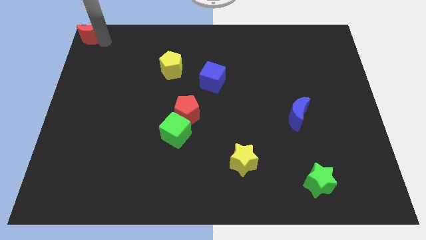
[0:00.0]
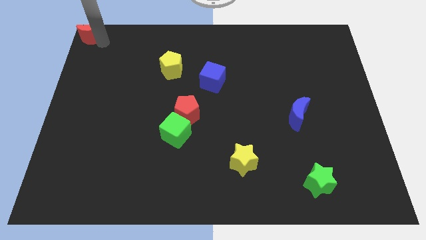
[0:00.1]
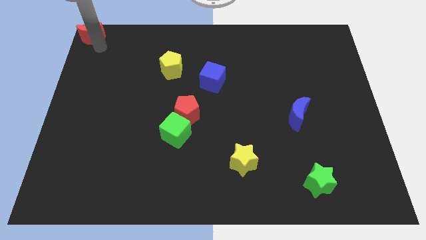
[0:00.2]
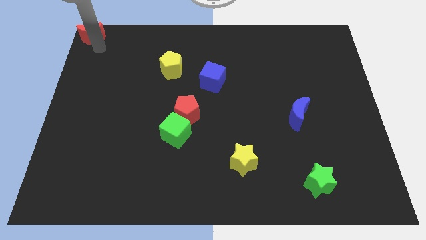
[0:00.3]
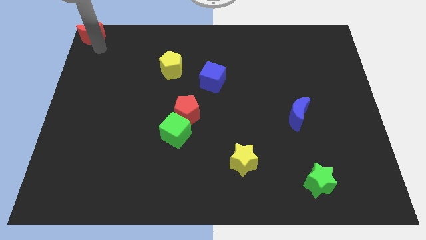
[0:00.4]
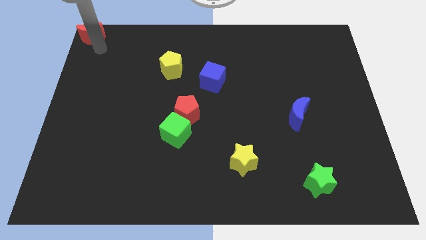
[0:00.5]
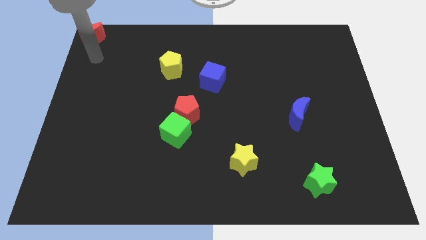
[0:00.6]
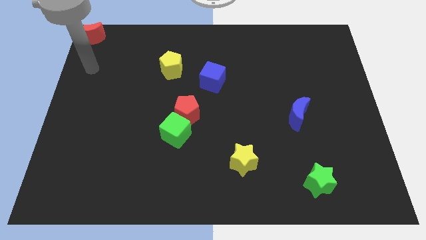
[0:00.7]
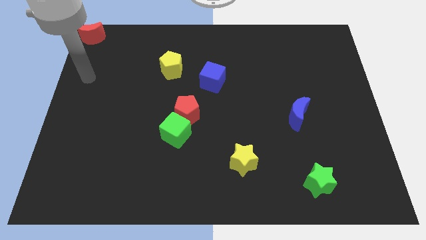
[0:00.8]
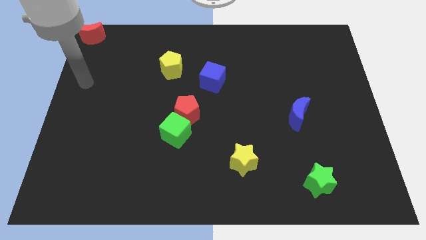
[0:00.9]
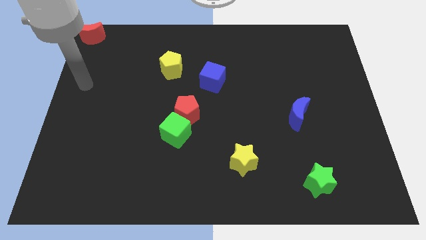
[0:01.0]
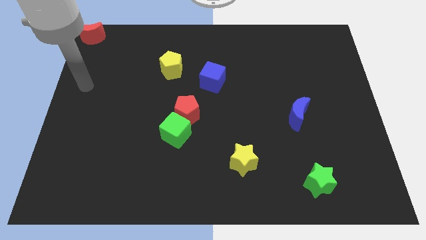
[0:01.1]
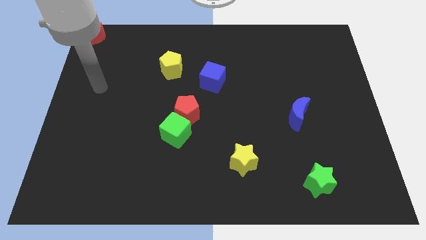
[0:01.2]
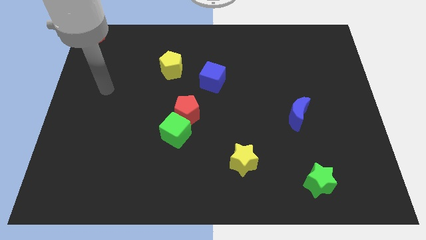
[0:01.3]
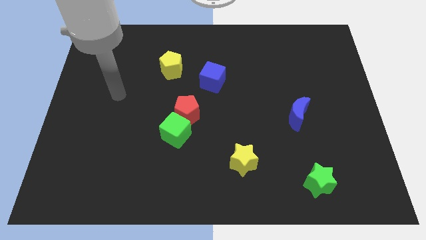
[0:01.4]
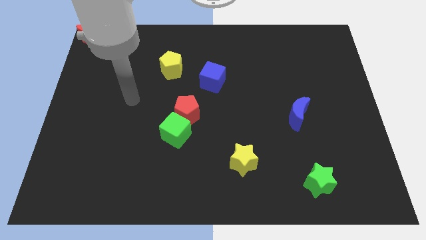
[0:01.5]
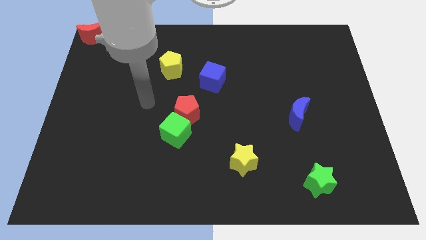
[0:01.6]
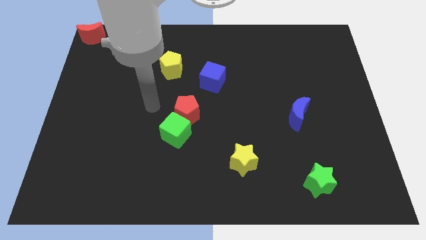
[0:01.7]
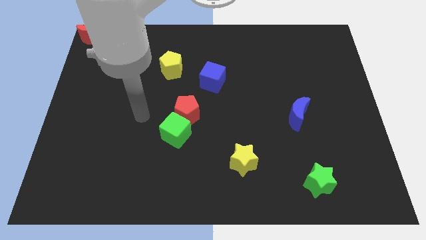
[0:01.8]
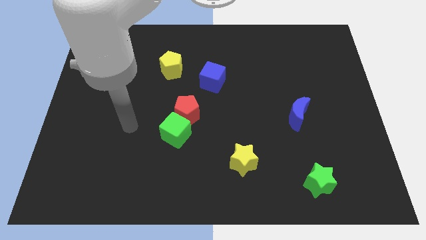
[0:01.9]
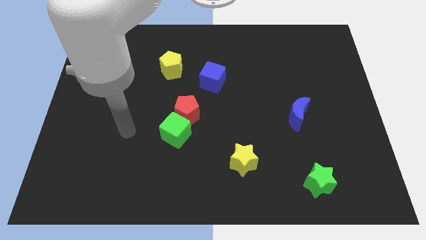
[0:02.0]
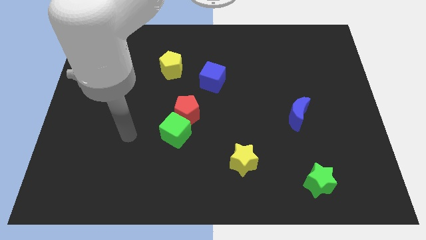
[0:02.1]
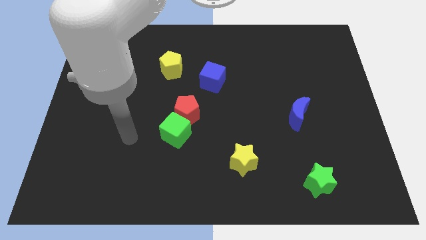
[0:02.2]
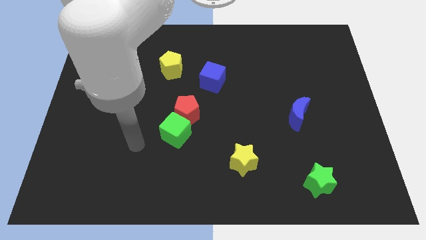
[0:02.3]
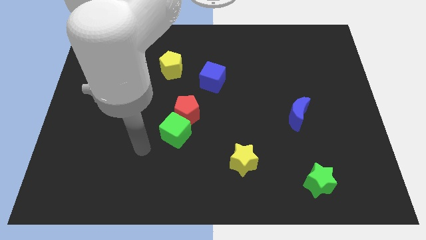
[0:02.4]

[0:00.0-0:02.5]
move the arm away from the red moon

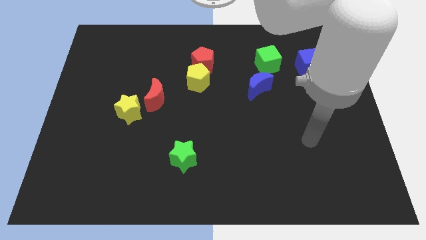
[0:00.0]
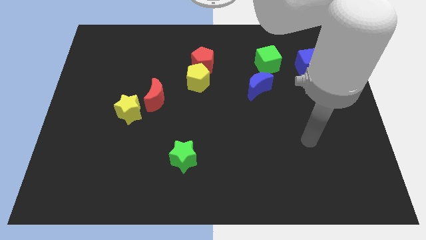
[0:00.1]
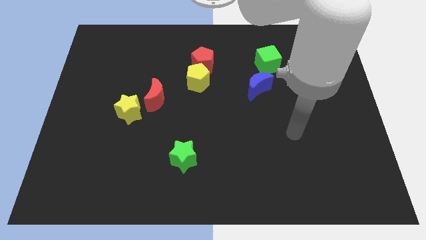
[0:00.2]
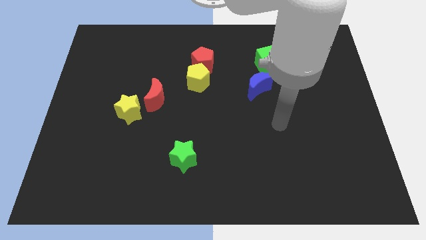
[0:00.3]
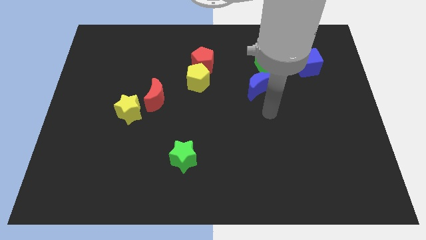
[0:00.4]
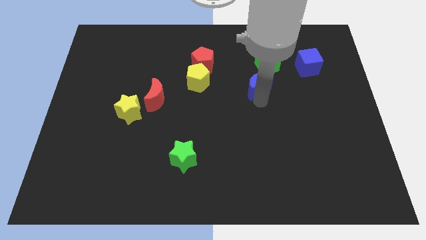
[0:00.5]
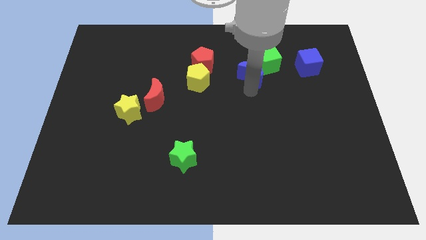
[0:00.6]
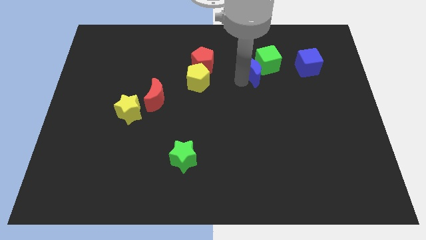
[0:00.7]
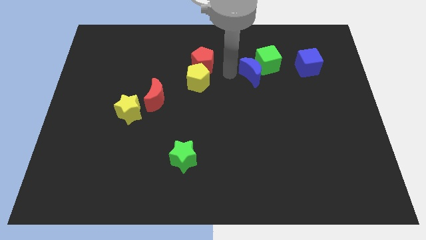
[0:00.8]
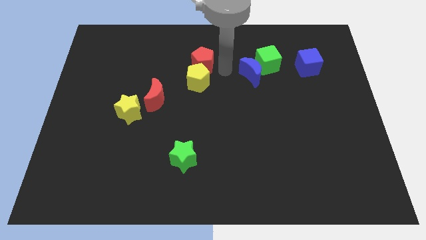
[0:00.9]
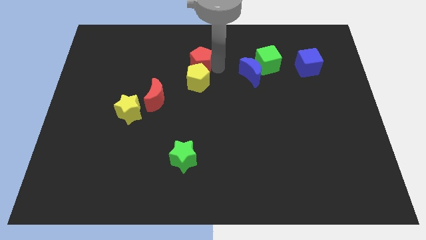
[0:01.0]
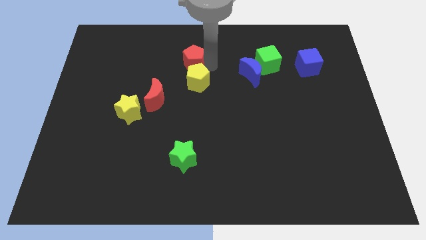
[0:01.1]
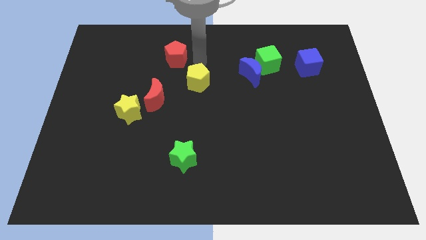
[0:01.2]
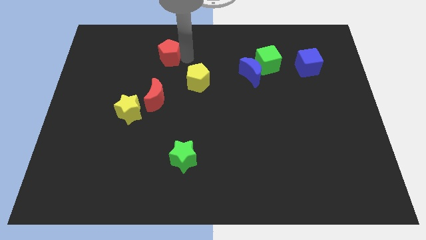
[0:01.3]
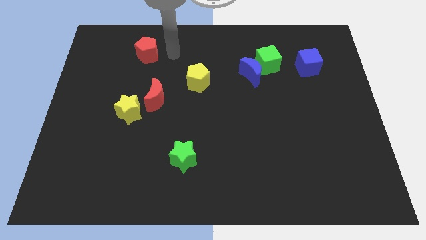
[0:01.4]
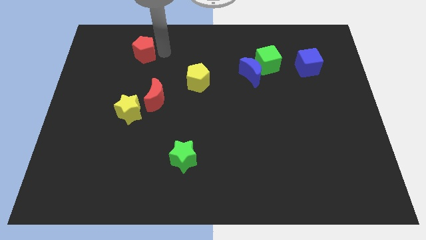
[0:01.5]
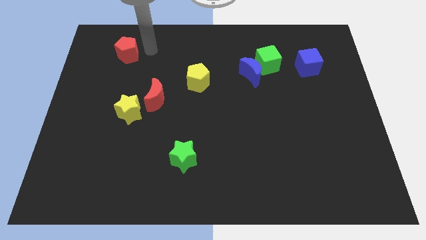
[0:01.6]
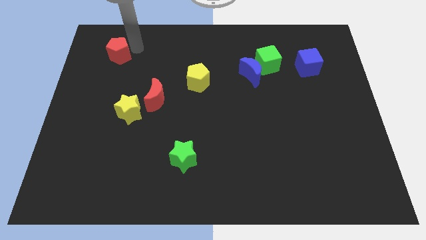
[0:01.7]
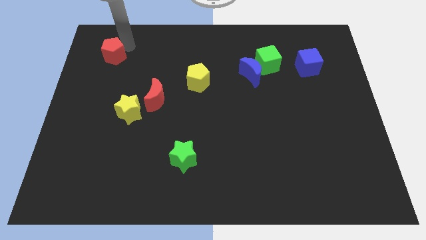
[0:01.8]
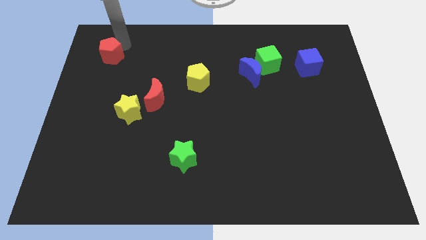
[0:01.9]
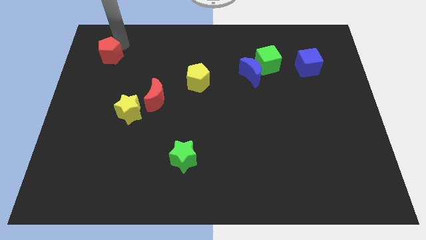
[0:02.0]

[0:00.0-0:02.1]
move the red pentagon to the top left corner of the board

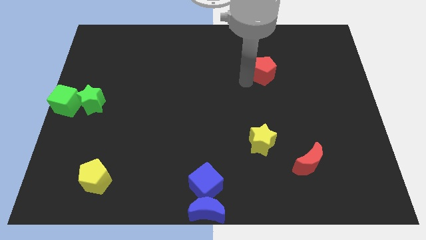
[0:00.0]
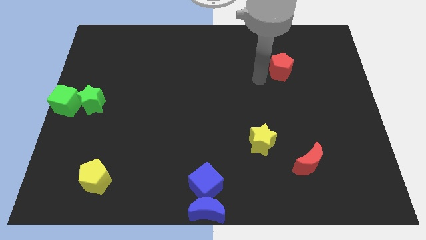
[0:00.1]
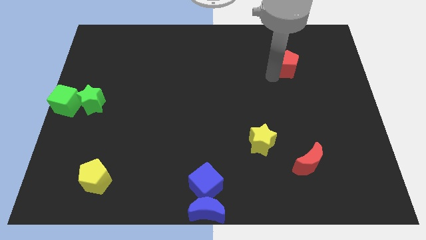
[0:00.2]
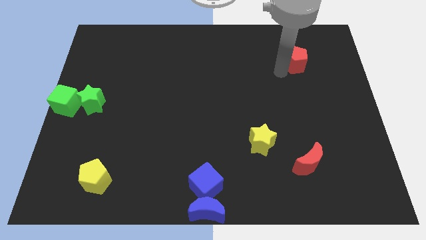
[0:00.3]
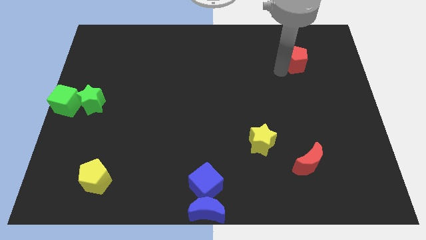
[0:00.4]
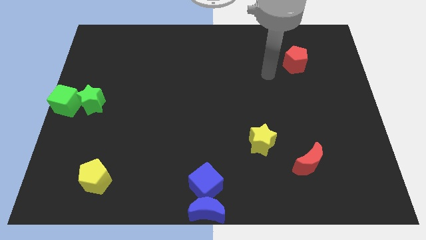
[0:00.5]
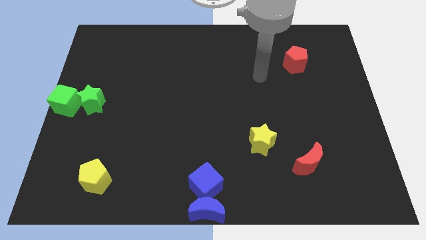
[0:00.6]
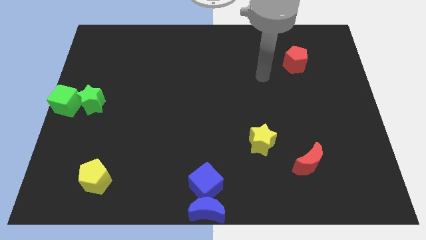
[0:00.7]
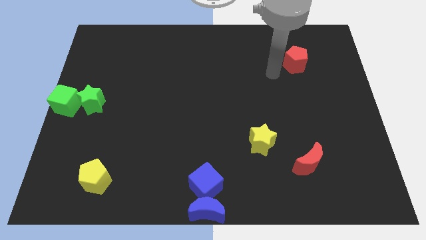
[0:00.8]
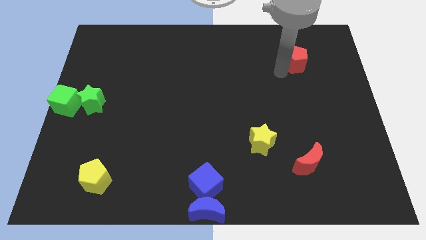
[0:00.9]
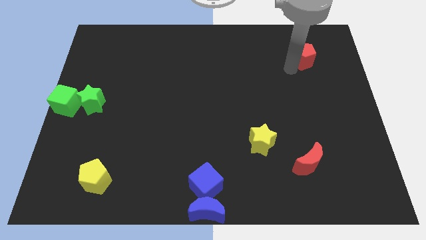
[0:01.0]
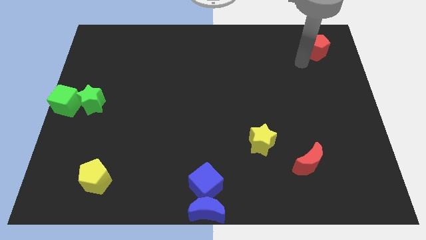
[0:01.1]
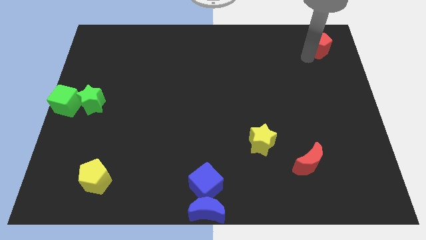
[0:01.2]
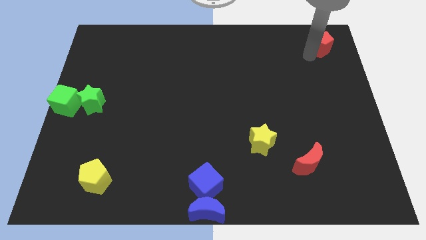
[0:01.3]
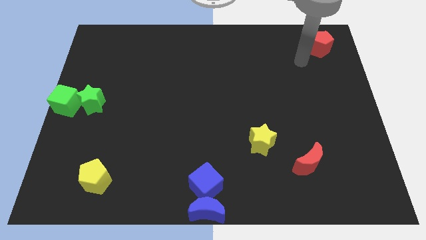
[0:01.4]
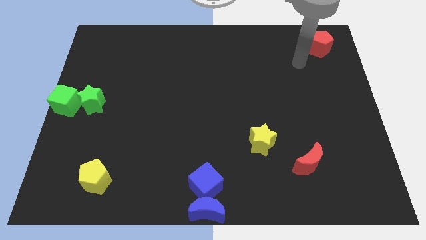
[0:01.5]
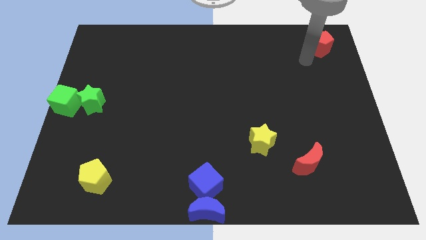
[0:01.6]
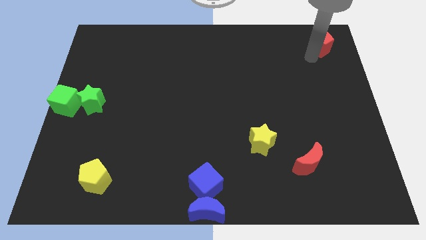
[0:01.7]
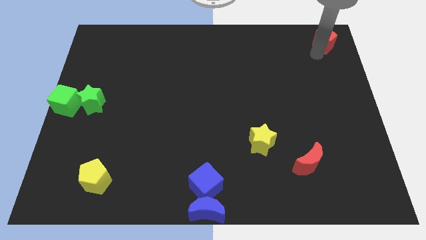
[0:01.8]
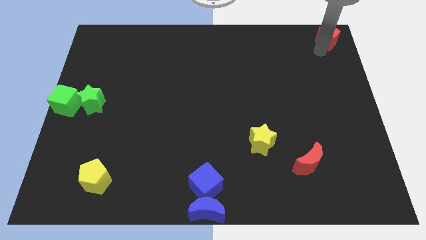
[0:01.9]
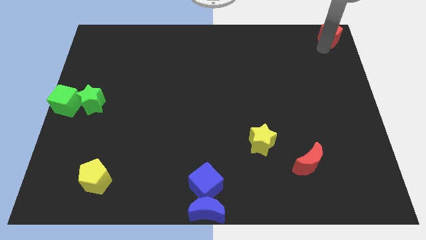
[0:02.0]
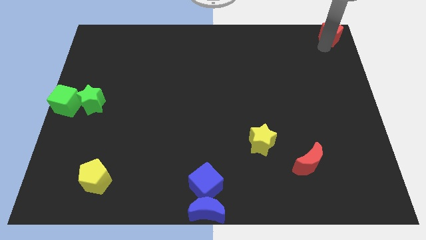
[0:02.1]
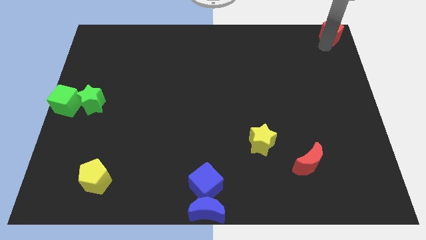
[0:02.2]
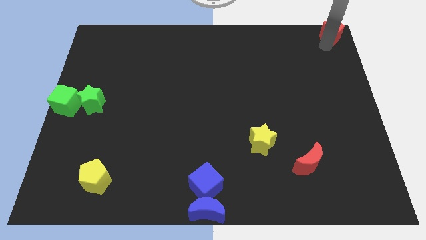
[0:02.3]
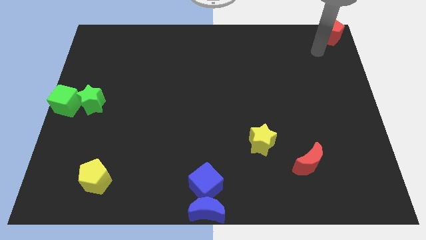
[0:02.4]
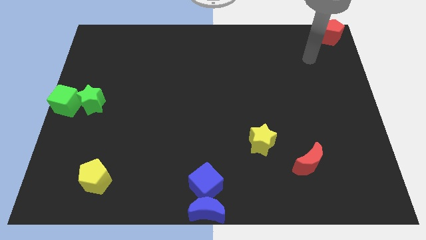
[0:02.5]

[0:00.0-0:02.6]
place the red pentagon at the top right corner of the board

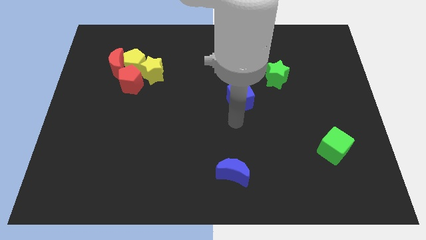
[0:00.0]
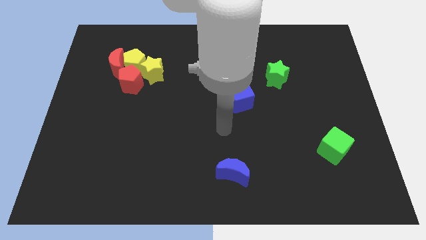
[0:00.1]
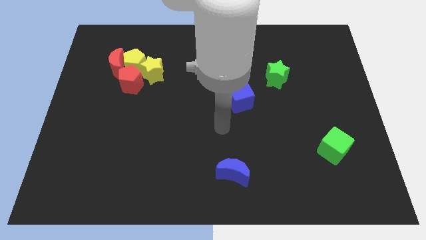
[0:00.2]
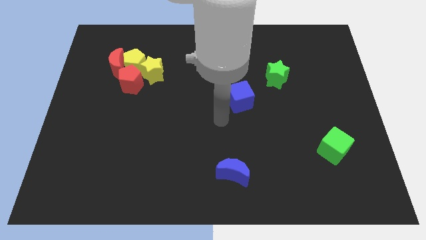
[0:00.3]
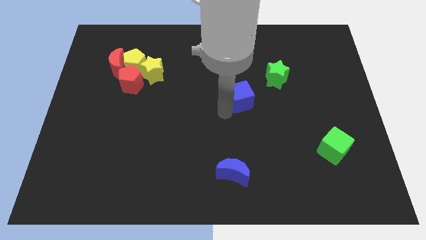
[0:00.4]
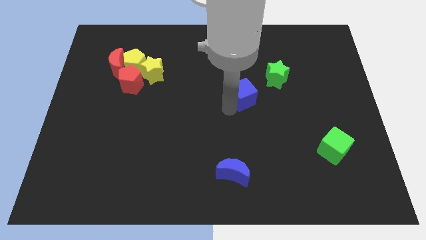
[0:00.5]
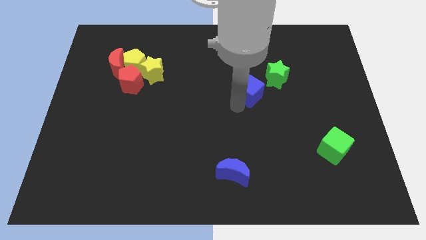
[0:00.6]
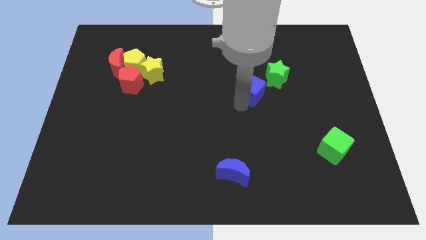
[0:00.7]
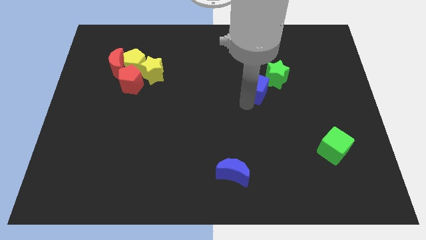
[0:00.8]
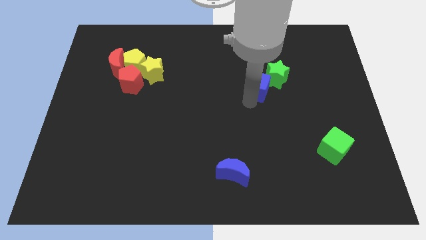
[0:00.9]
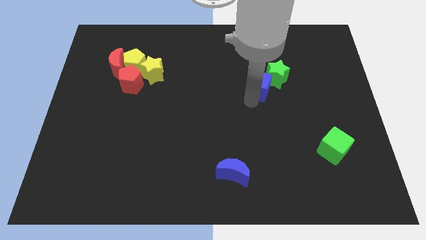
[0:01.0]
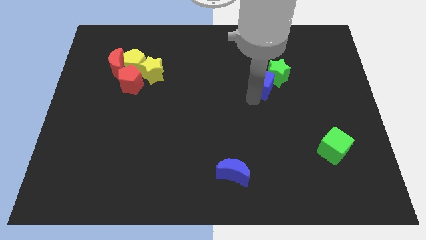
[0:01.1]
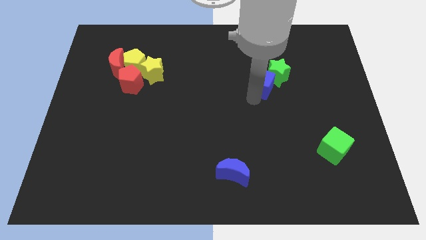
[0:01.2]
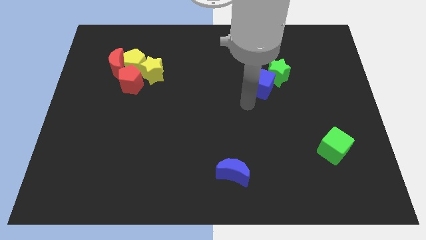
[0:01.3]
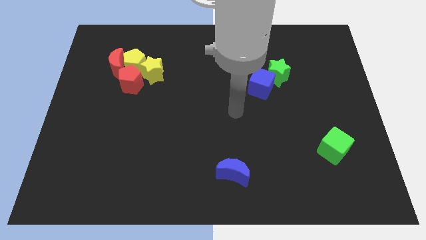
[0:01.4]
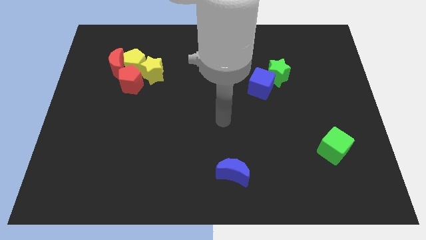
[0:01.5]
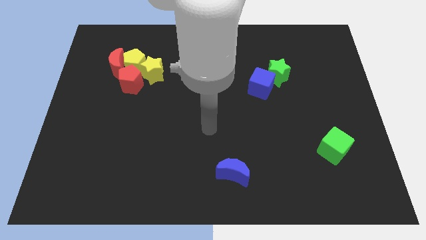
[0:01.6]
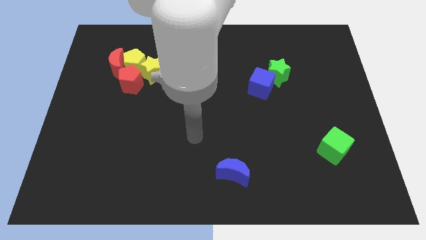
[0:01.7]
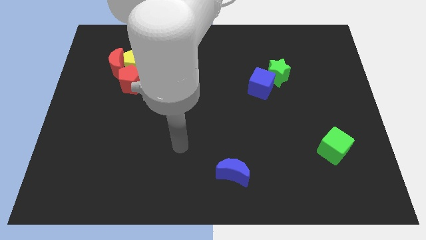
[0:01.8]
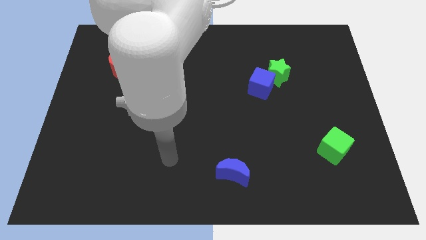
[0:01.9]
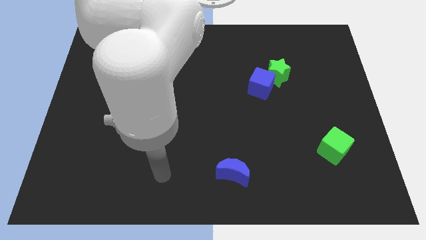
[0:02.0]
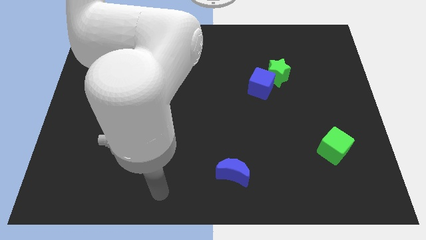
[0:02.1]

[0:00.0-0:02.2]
drag the blue cube near to the green star
